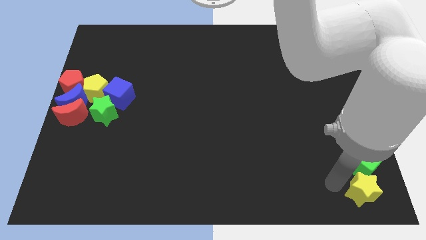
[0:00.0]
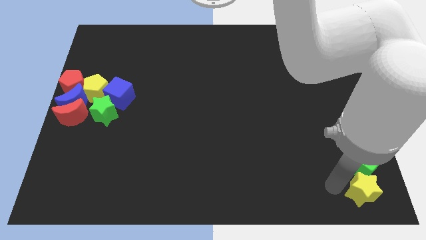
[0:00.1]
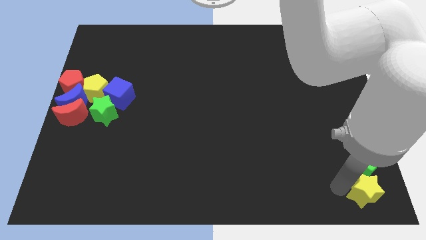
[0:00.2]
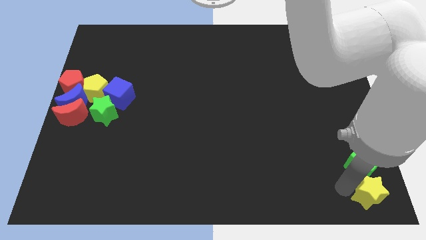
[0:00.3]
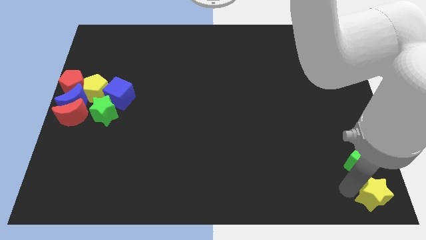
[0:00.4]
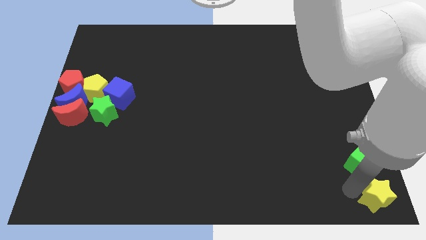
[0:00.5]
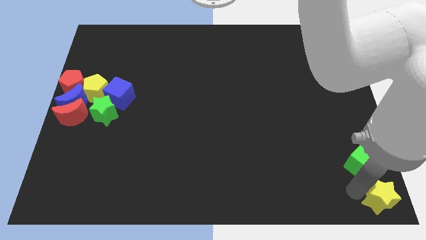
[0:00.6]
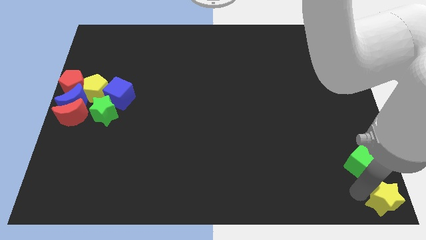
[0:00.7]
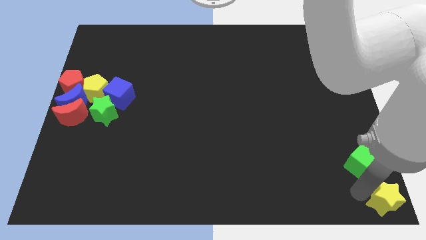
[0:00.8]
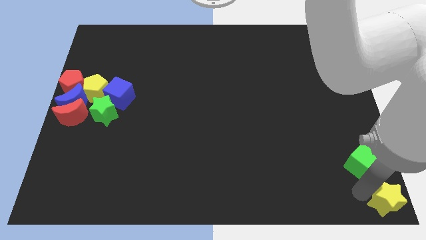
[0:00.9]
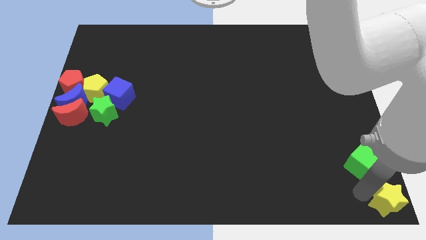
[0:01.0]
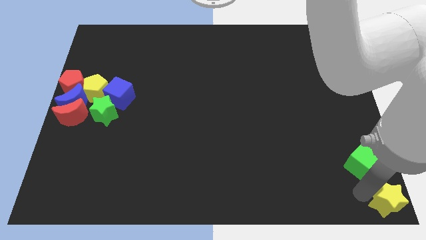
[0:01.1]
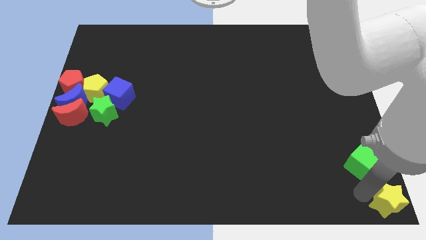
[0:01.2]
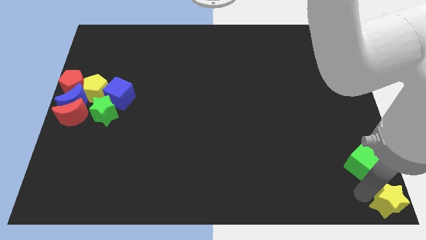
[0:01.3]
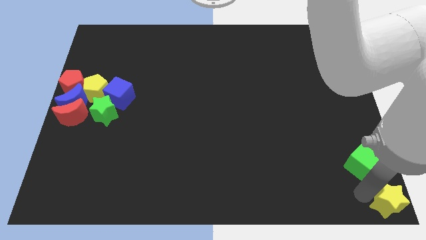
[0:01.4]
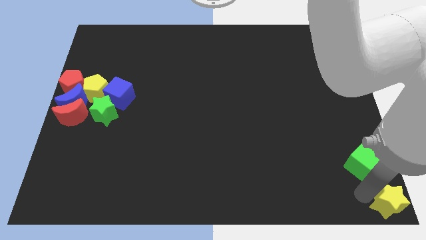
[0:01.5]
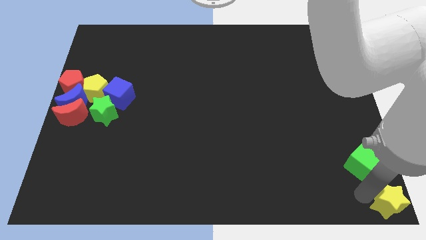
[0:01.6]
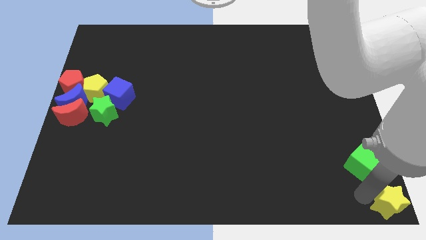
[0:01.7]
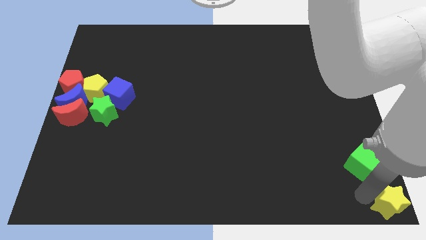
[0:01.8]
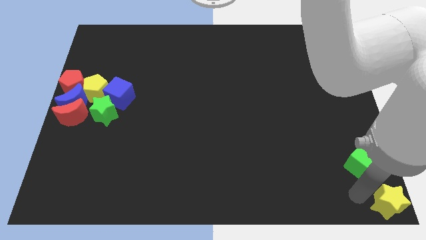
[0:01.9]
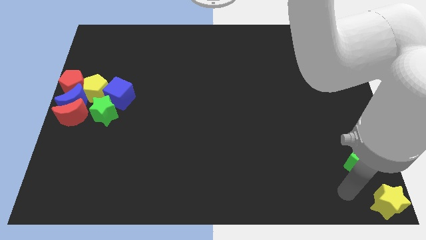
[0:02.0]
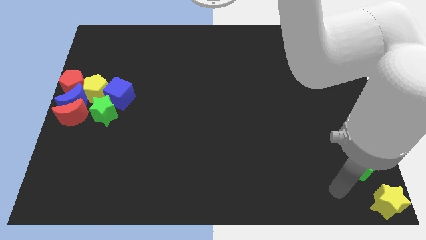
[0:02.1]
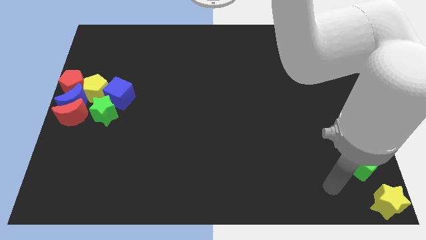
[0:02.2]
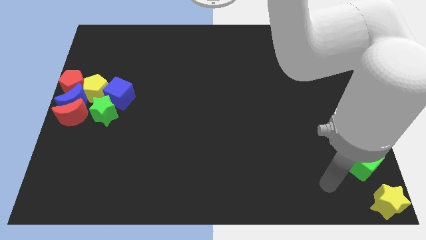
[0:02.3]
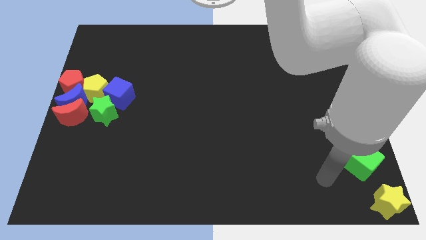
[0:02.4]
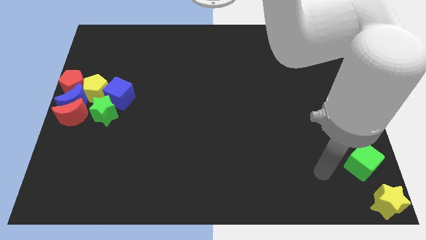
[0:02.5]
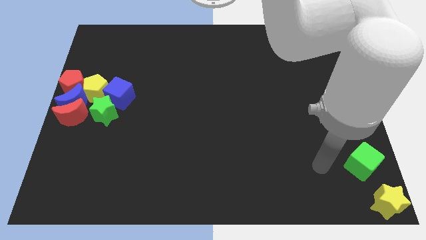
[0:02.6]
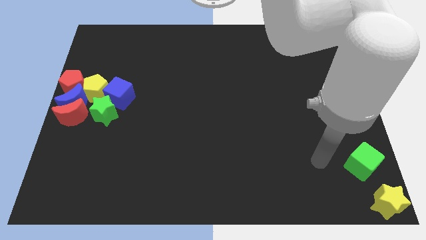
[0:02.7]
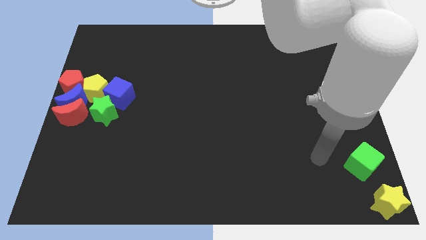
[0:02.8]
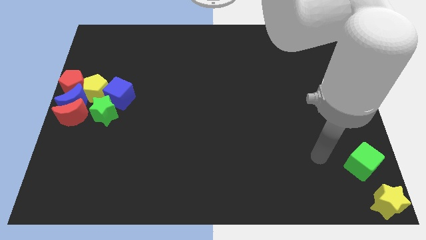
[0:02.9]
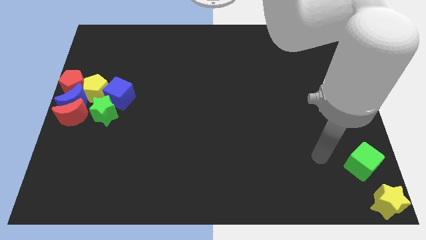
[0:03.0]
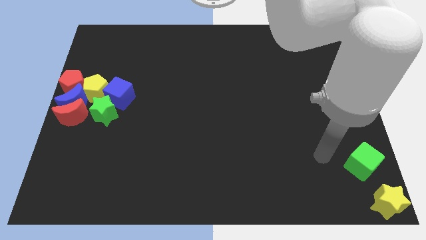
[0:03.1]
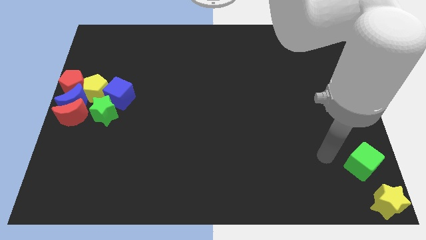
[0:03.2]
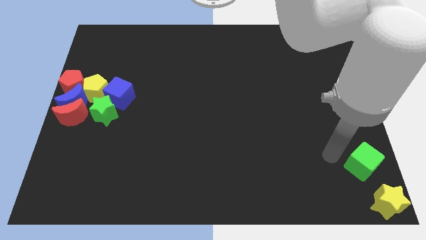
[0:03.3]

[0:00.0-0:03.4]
place the yellow star at the bottom right corner of the board

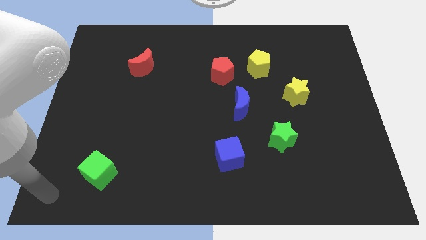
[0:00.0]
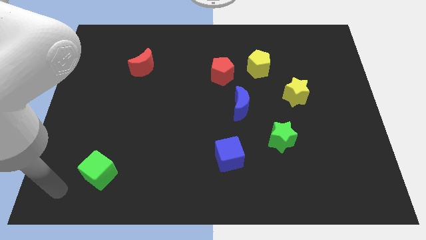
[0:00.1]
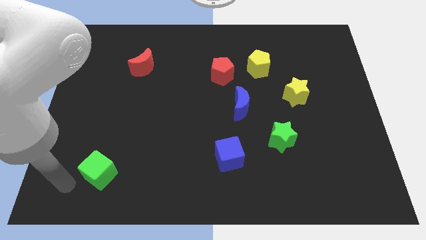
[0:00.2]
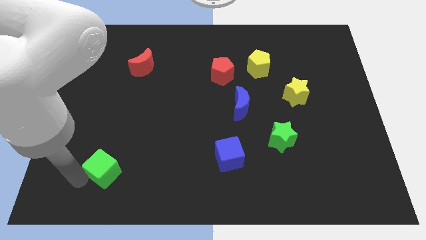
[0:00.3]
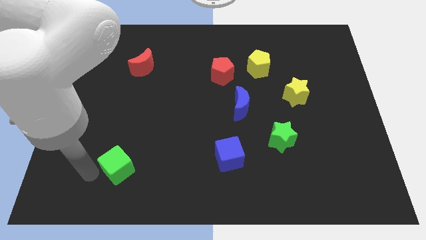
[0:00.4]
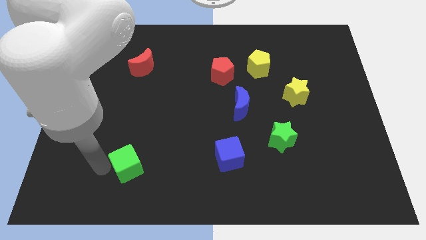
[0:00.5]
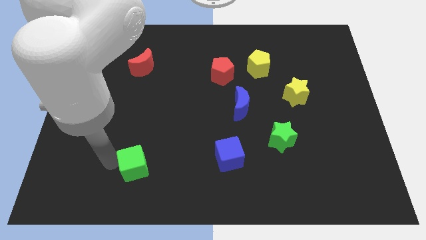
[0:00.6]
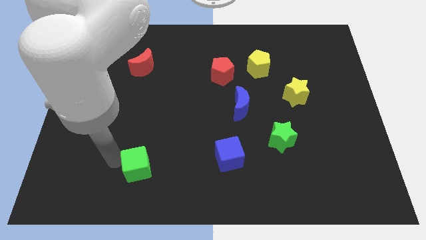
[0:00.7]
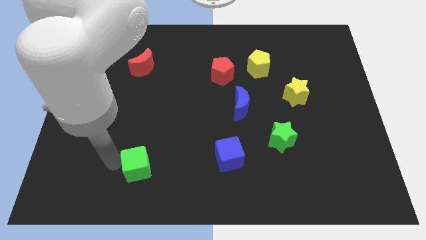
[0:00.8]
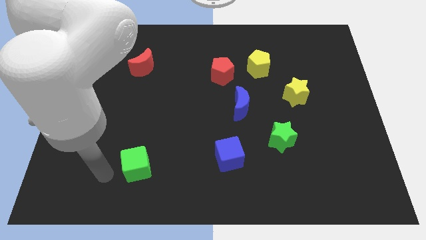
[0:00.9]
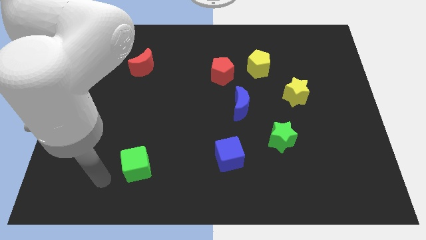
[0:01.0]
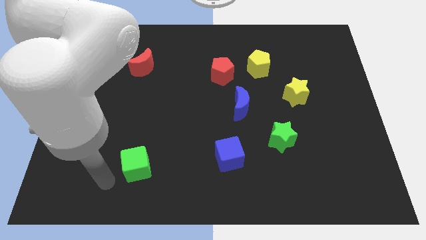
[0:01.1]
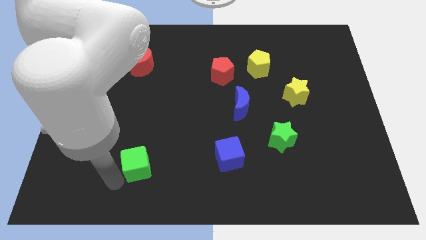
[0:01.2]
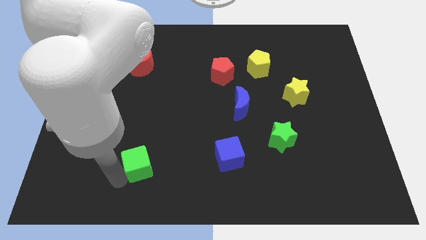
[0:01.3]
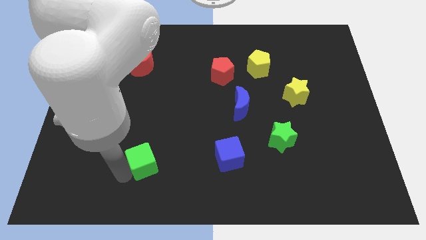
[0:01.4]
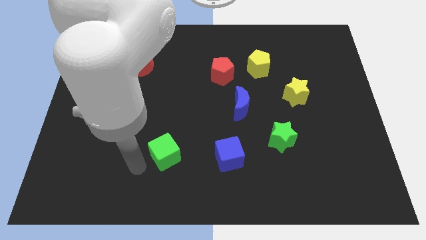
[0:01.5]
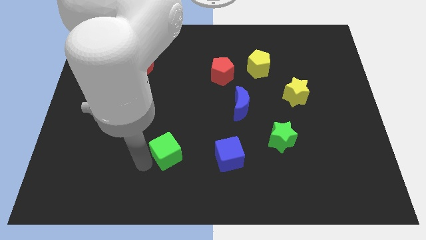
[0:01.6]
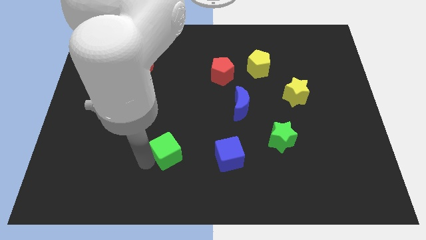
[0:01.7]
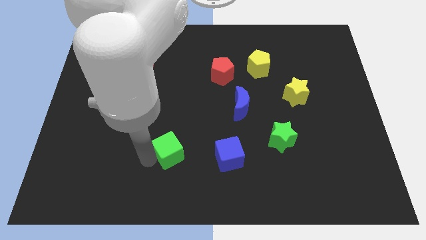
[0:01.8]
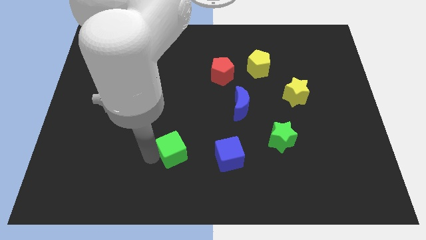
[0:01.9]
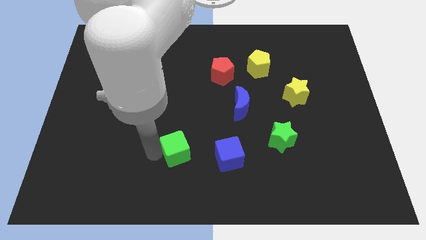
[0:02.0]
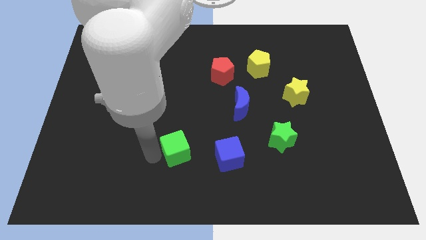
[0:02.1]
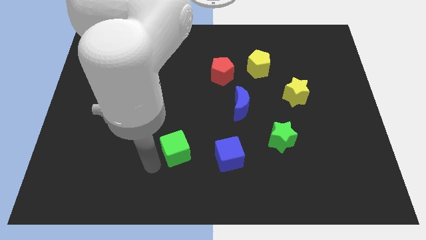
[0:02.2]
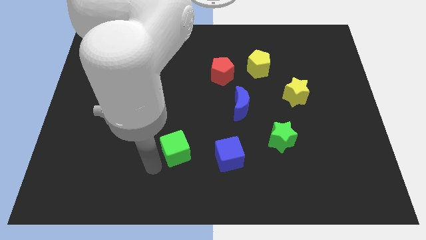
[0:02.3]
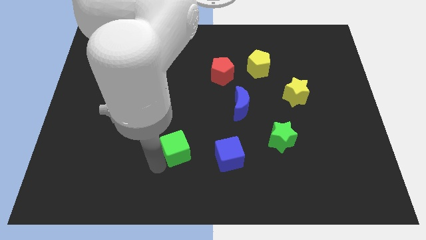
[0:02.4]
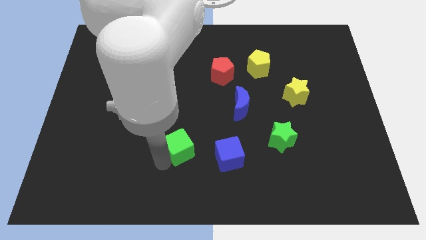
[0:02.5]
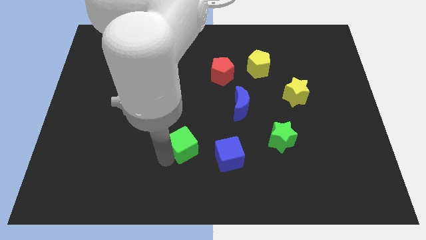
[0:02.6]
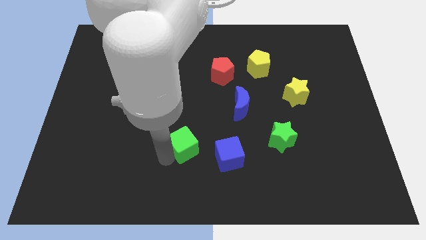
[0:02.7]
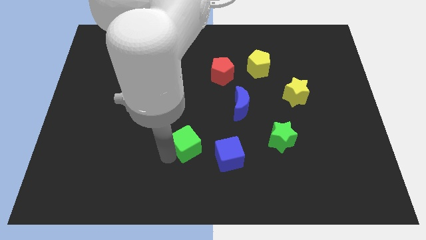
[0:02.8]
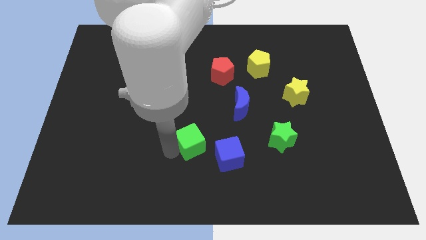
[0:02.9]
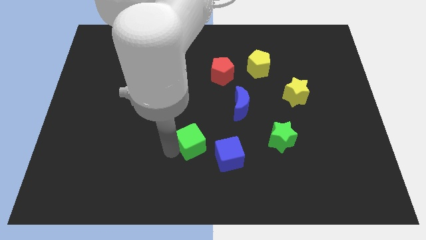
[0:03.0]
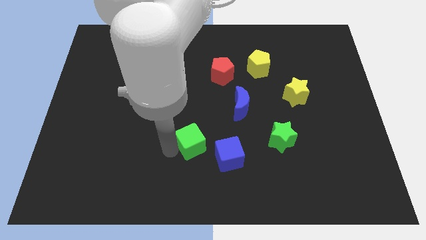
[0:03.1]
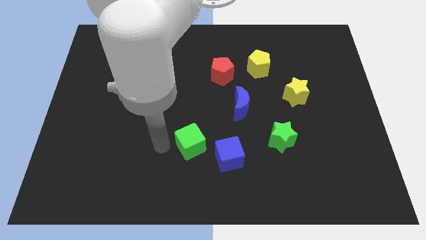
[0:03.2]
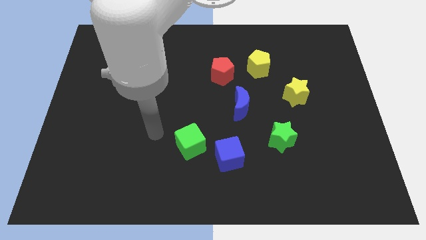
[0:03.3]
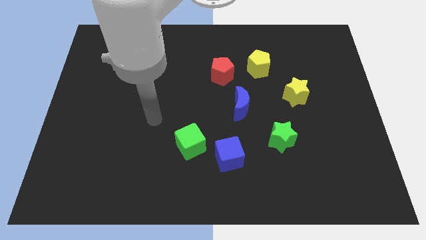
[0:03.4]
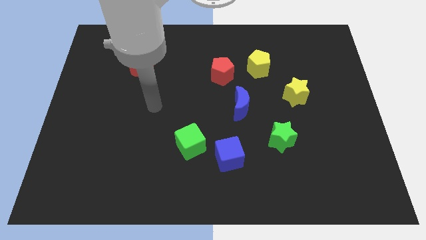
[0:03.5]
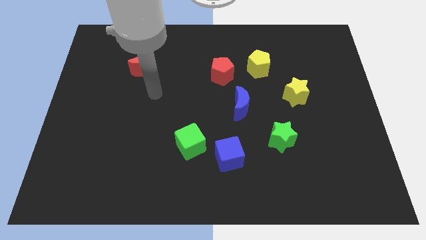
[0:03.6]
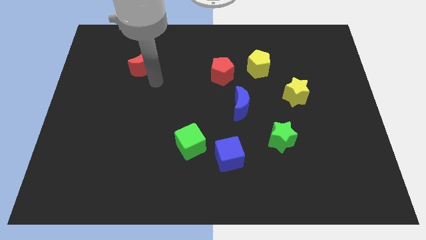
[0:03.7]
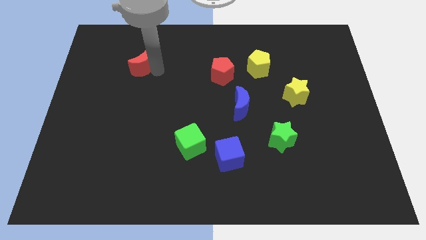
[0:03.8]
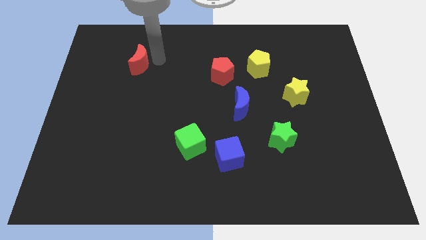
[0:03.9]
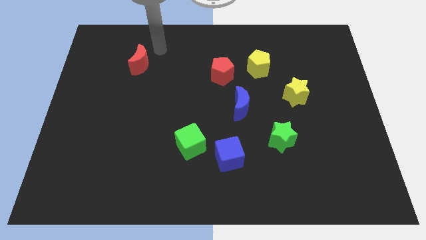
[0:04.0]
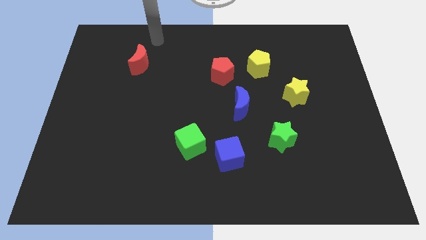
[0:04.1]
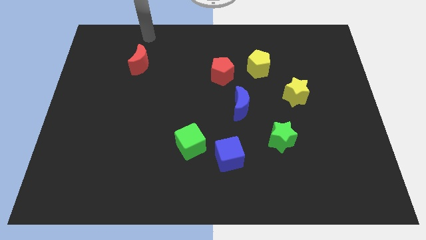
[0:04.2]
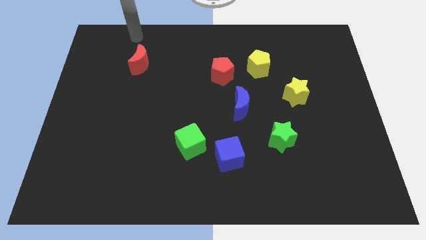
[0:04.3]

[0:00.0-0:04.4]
move the green cube at the left side to the blue cube

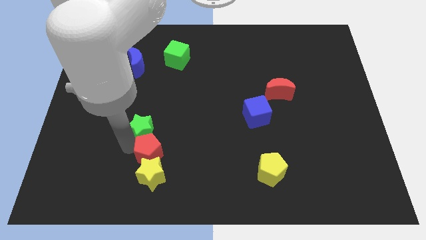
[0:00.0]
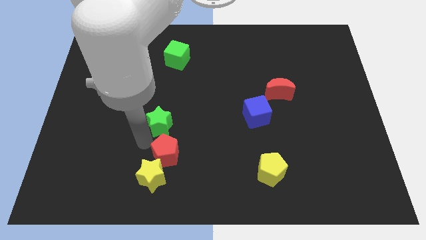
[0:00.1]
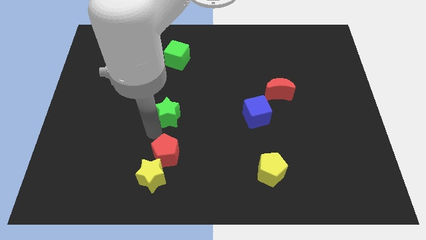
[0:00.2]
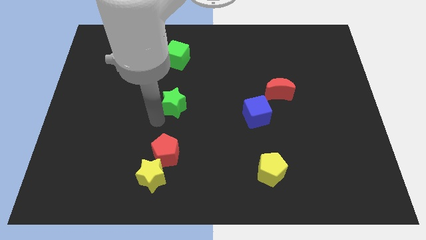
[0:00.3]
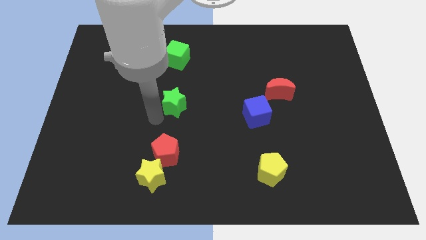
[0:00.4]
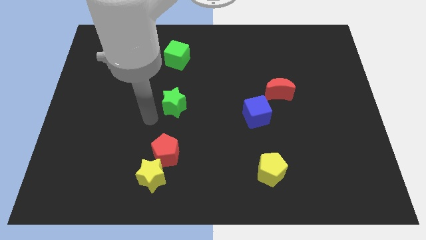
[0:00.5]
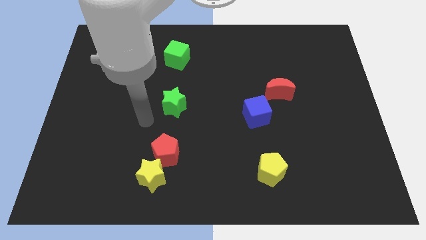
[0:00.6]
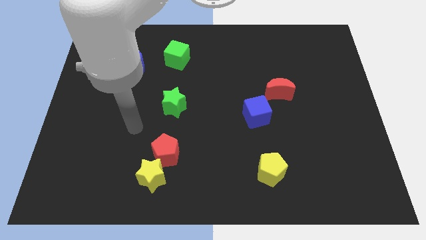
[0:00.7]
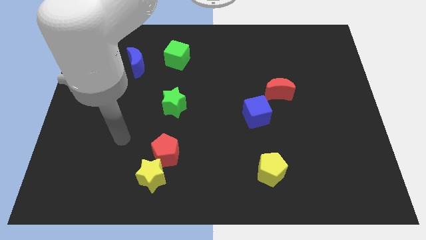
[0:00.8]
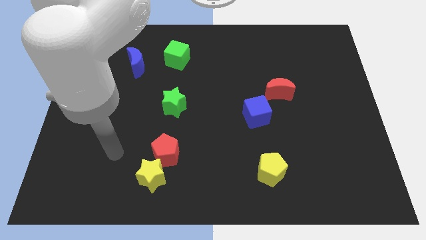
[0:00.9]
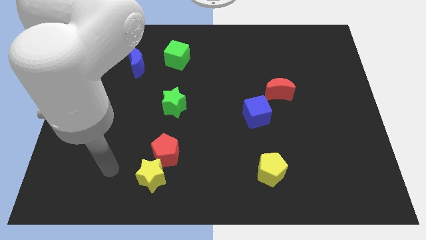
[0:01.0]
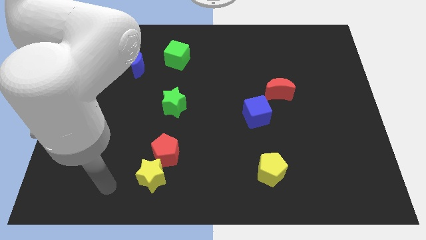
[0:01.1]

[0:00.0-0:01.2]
place green star to the bottom of the green cube
